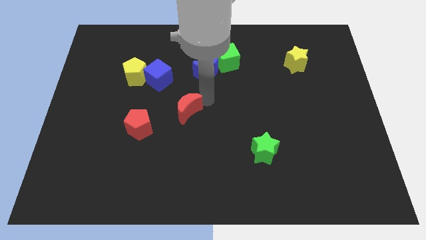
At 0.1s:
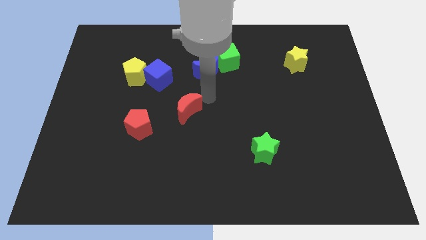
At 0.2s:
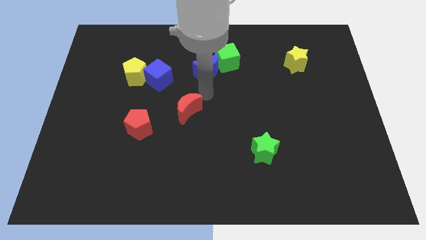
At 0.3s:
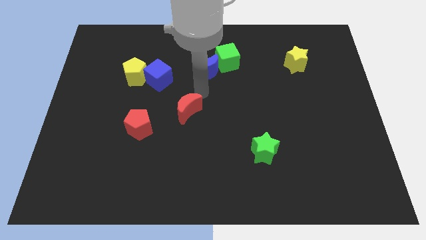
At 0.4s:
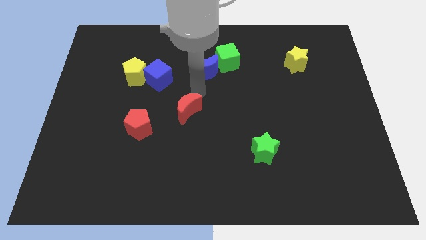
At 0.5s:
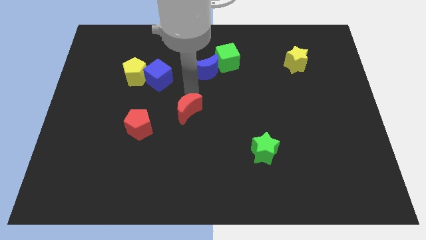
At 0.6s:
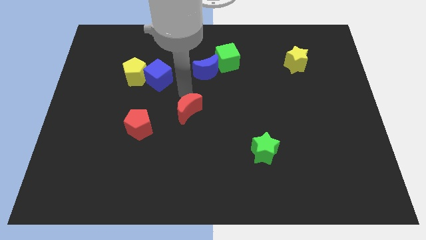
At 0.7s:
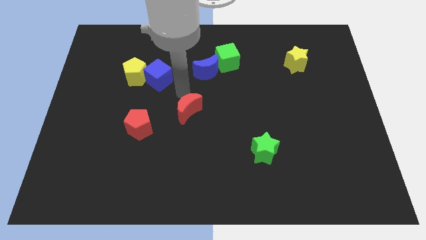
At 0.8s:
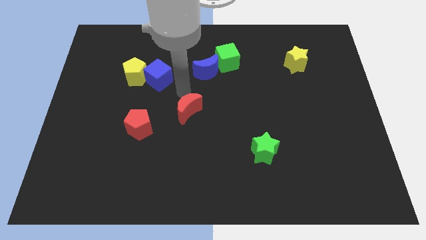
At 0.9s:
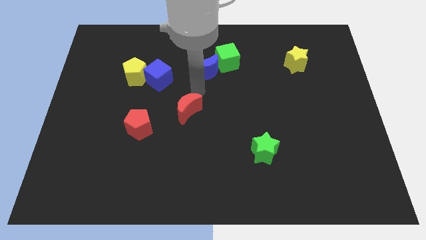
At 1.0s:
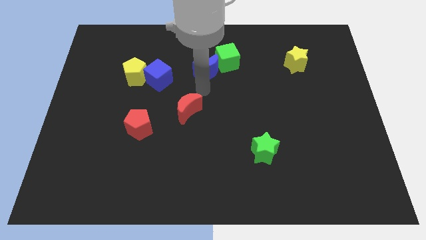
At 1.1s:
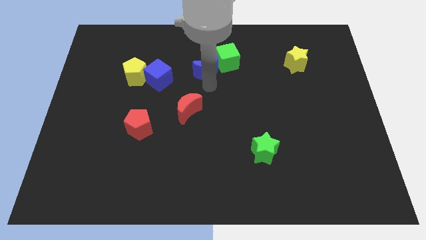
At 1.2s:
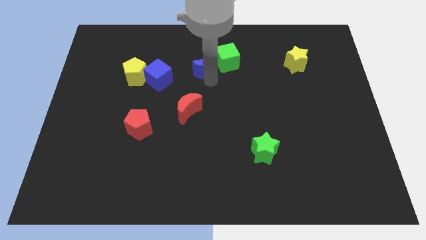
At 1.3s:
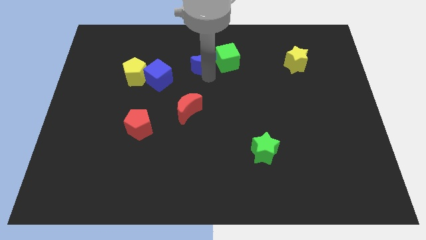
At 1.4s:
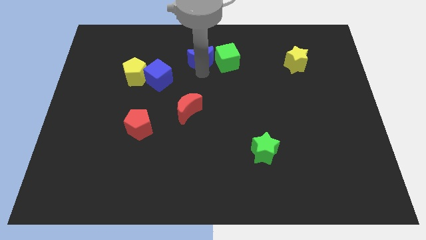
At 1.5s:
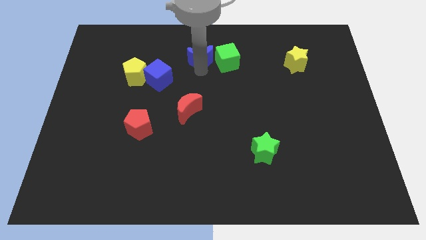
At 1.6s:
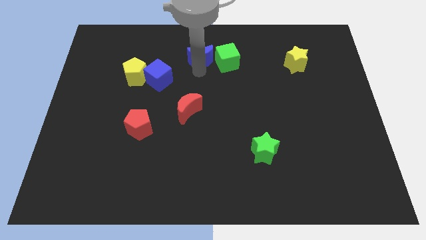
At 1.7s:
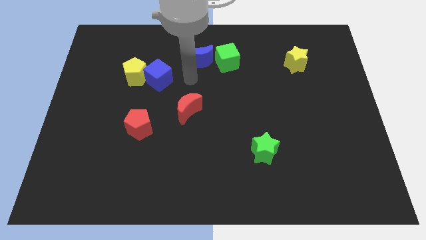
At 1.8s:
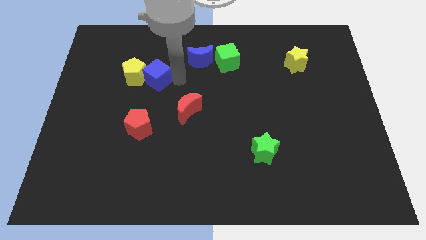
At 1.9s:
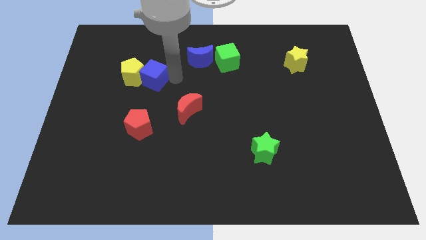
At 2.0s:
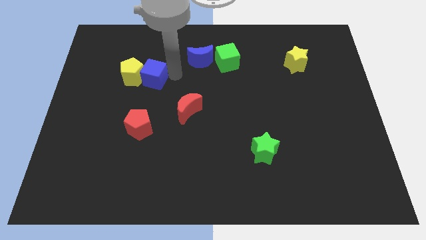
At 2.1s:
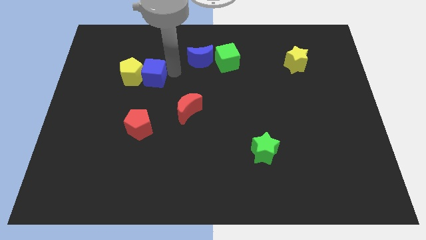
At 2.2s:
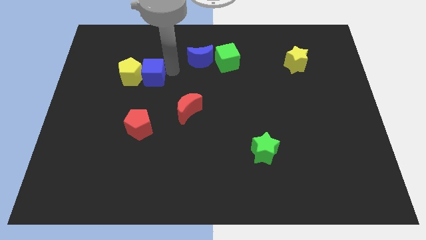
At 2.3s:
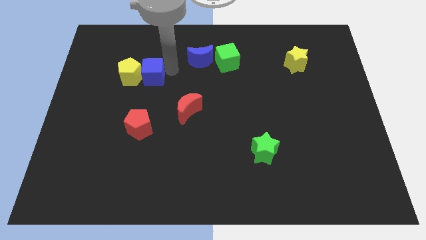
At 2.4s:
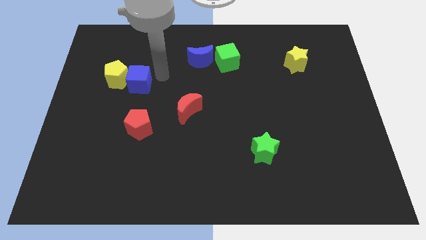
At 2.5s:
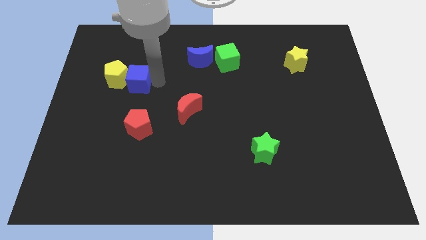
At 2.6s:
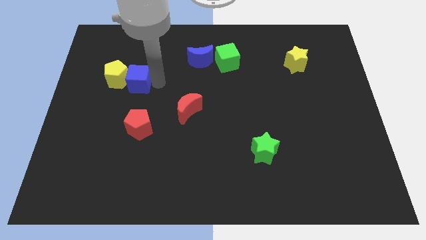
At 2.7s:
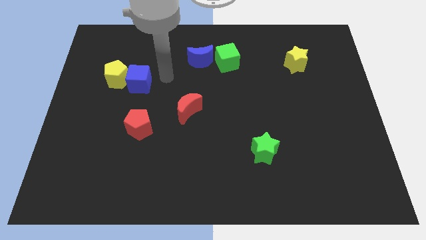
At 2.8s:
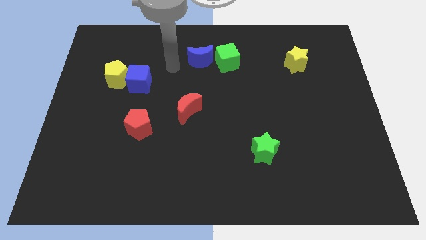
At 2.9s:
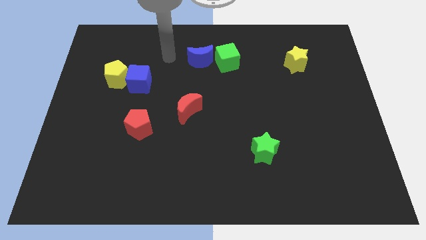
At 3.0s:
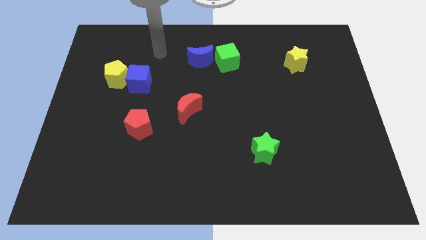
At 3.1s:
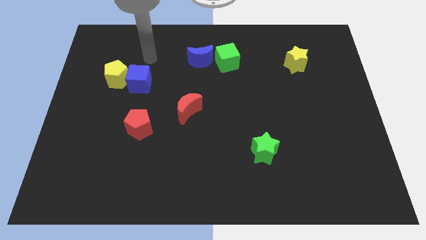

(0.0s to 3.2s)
separate the blue cube and yellow pentagon from blue moon

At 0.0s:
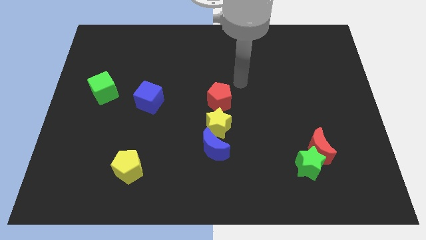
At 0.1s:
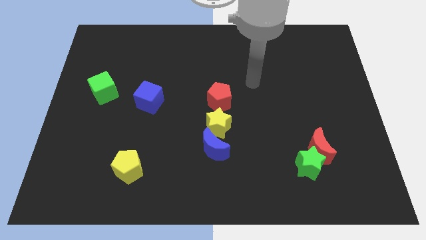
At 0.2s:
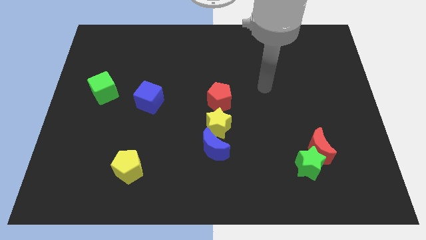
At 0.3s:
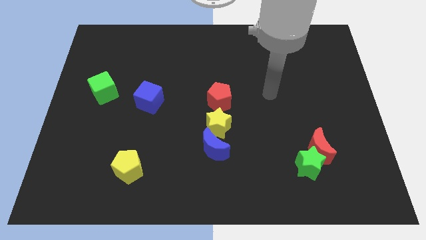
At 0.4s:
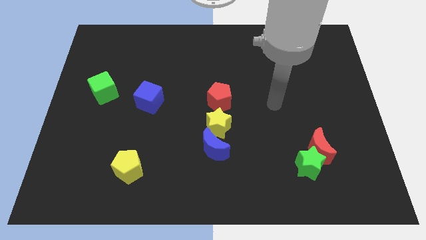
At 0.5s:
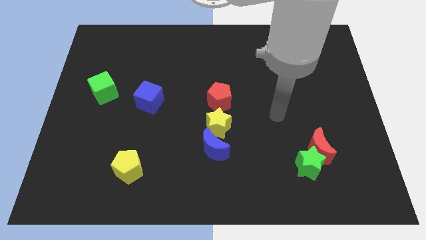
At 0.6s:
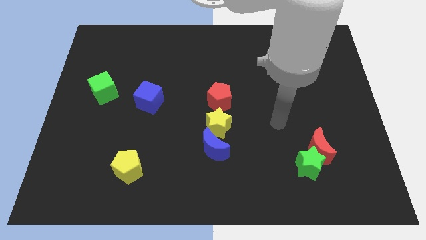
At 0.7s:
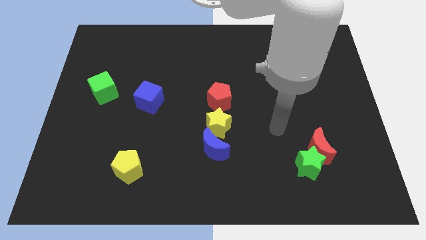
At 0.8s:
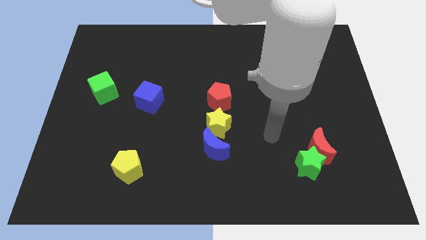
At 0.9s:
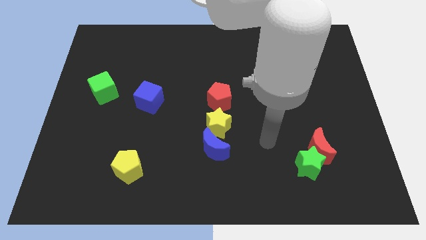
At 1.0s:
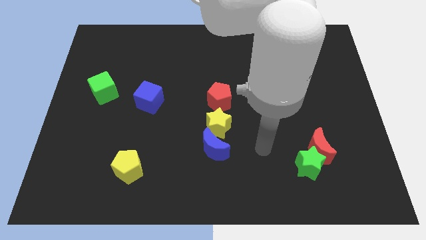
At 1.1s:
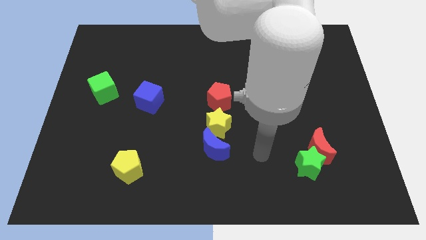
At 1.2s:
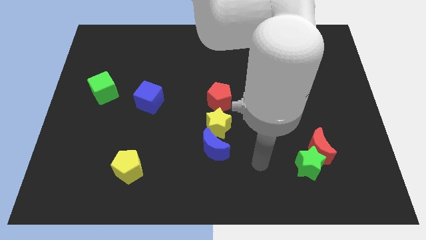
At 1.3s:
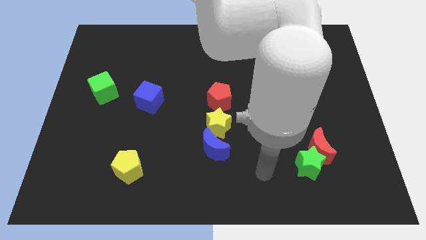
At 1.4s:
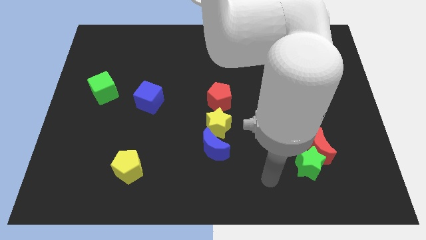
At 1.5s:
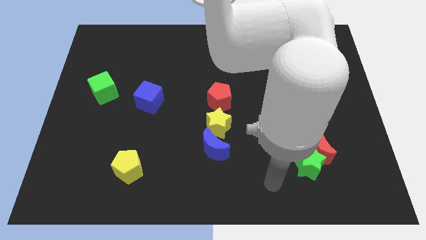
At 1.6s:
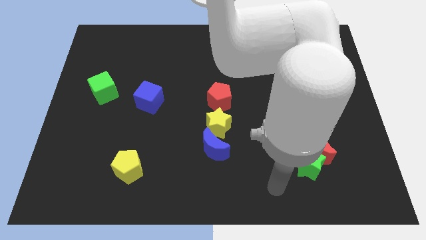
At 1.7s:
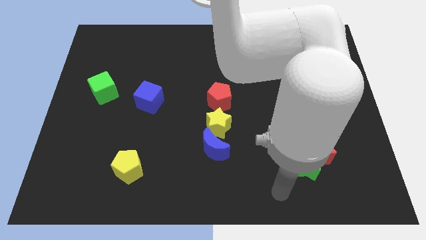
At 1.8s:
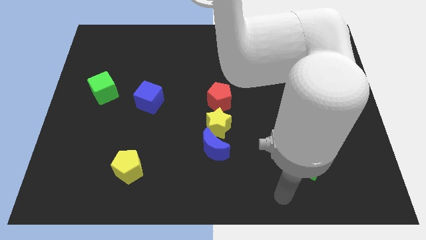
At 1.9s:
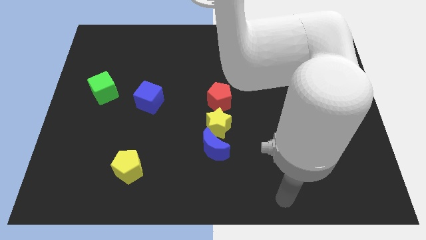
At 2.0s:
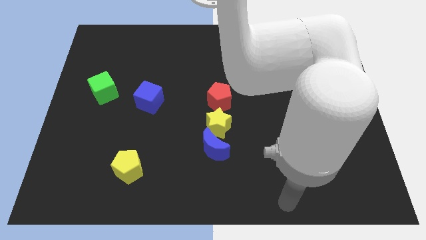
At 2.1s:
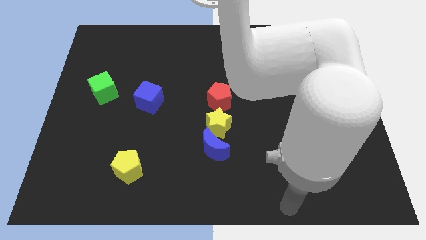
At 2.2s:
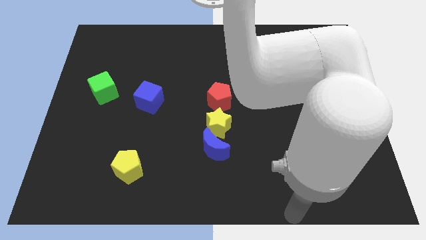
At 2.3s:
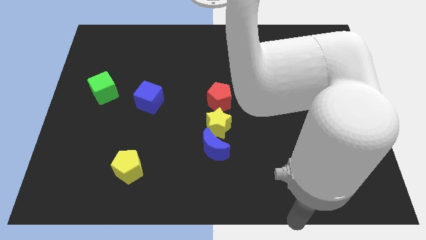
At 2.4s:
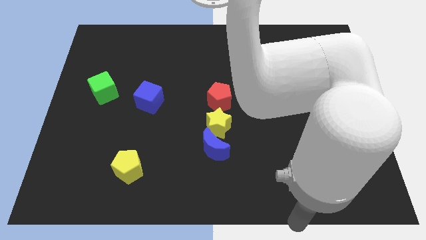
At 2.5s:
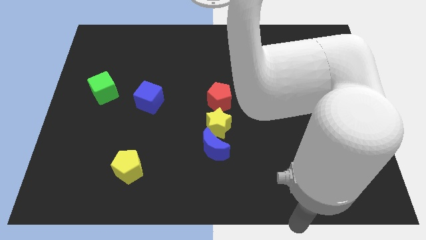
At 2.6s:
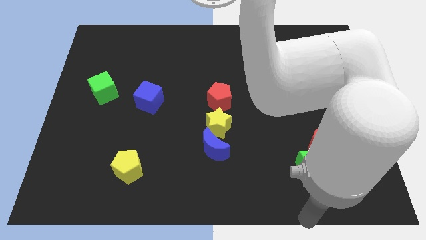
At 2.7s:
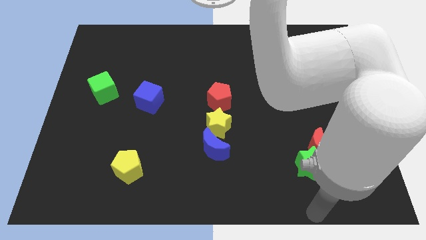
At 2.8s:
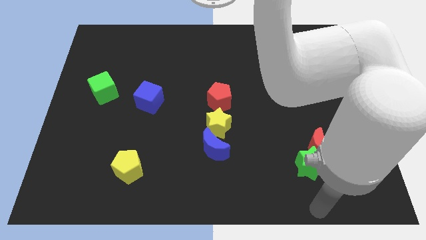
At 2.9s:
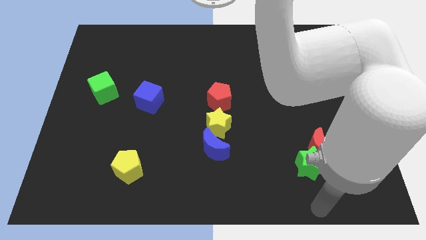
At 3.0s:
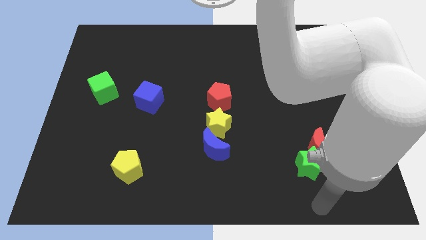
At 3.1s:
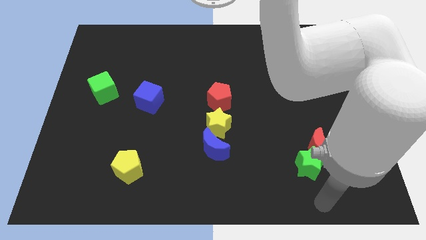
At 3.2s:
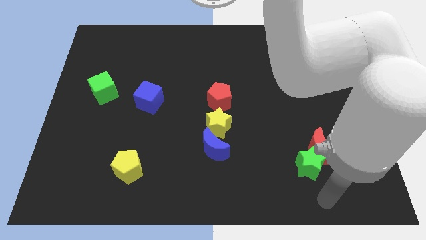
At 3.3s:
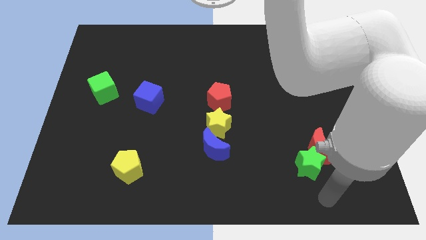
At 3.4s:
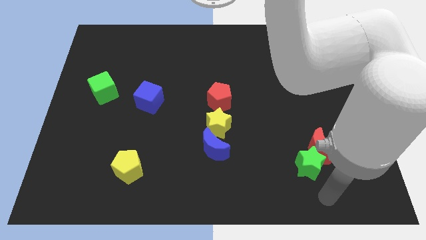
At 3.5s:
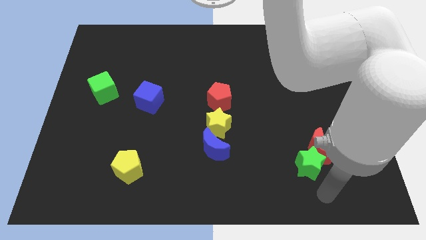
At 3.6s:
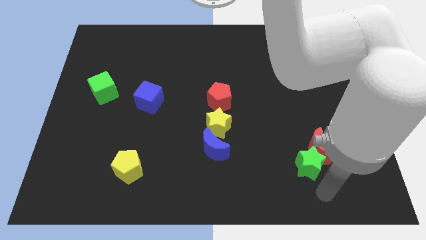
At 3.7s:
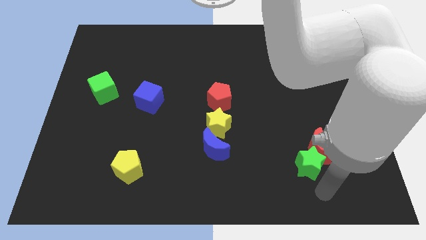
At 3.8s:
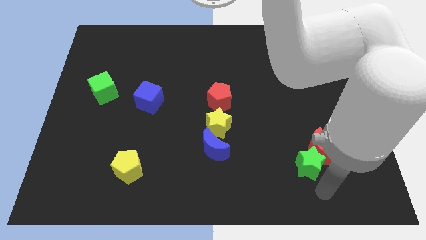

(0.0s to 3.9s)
point your arm at the bottom right side of green star

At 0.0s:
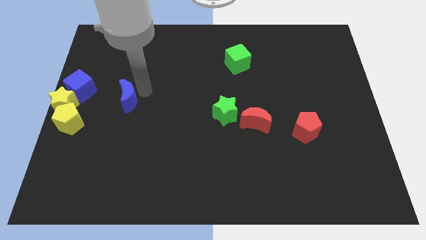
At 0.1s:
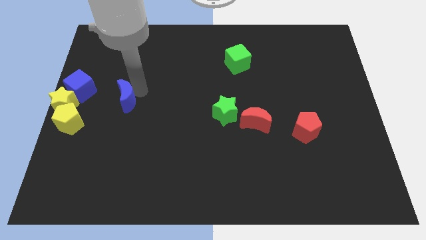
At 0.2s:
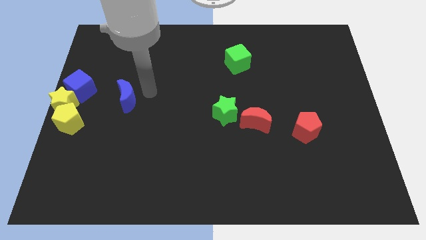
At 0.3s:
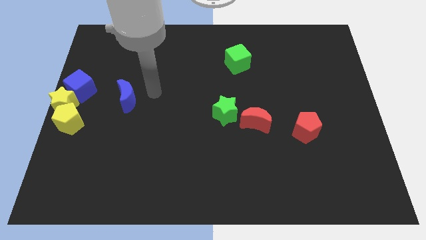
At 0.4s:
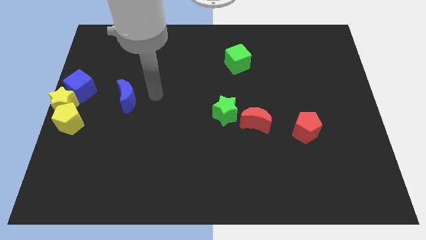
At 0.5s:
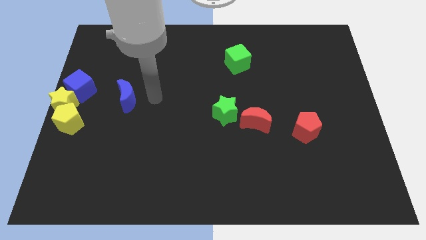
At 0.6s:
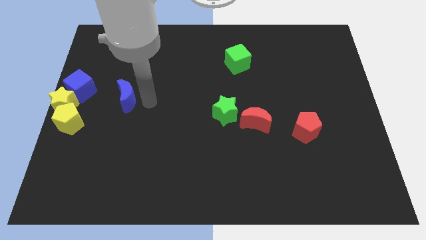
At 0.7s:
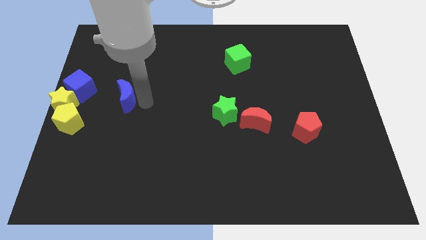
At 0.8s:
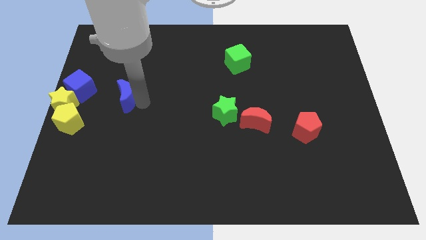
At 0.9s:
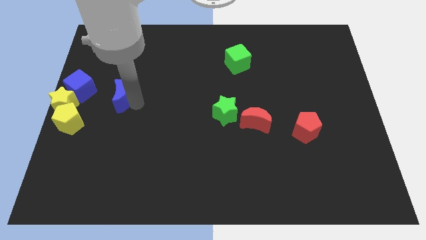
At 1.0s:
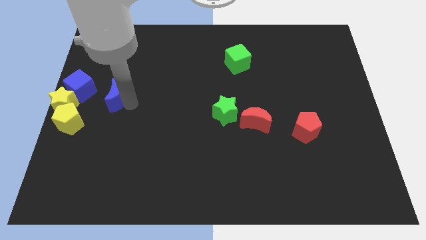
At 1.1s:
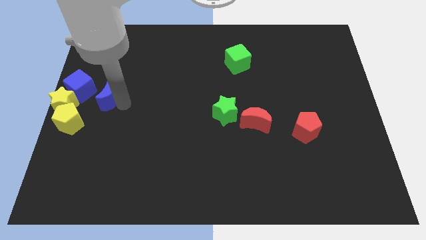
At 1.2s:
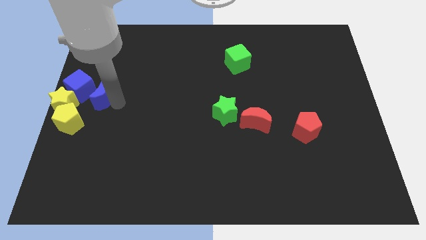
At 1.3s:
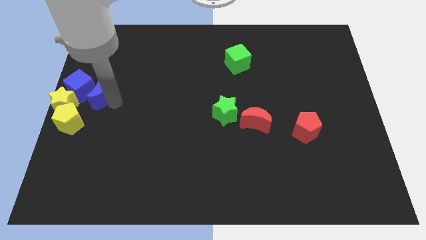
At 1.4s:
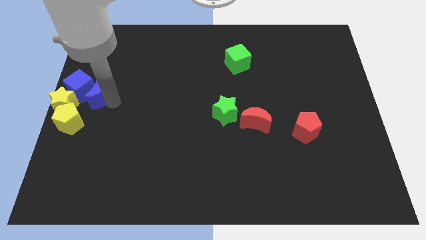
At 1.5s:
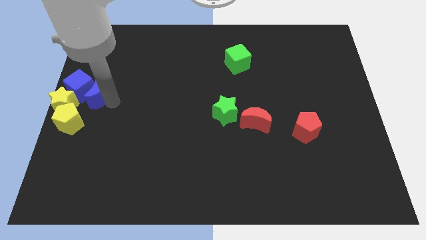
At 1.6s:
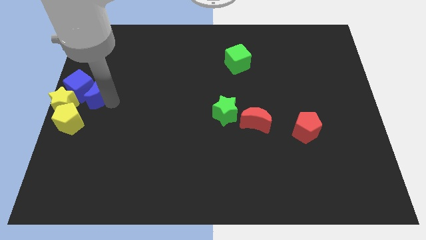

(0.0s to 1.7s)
push the blue moon into the blue cube

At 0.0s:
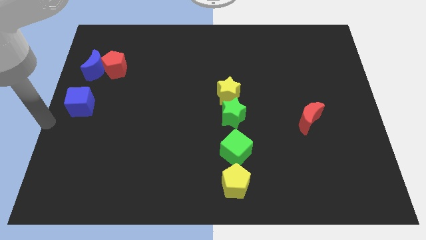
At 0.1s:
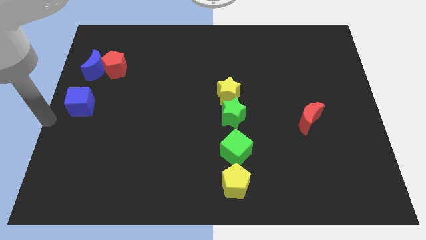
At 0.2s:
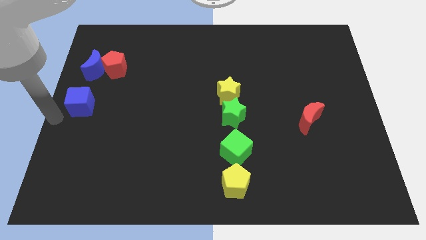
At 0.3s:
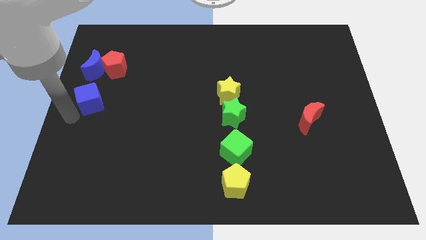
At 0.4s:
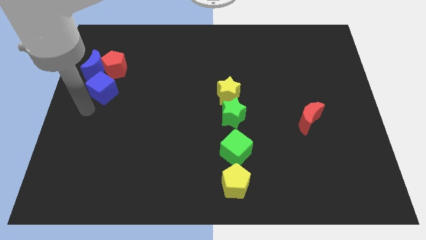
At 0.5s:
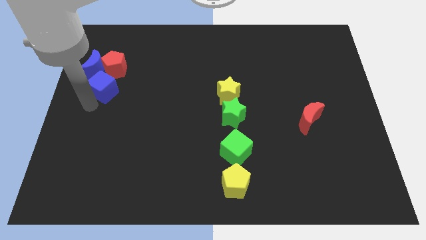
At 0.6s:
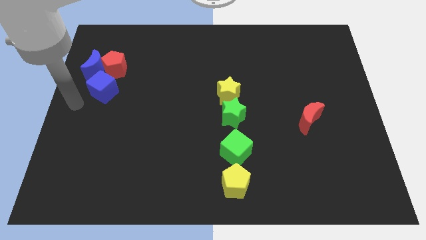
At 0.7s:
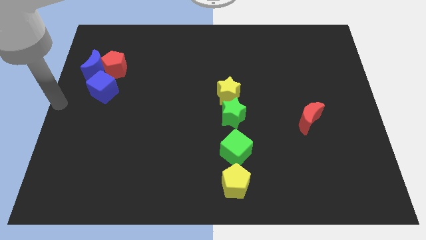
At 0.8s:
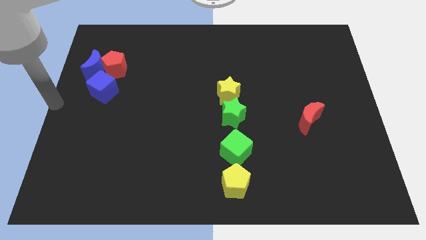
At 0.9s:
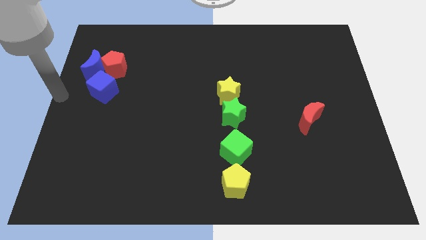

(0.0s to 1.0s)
move the blue cube to the bottom of red pentagon and blue moon
